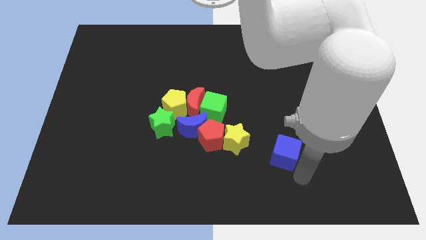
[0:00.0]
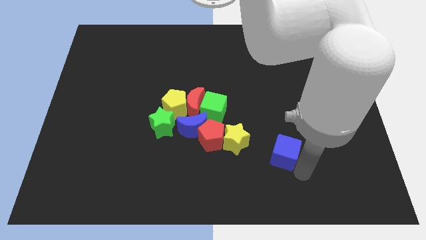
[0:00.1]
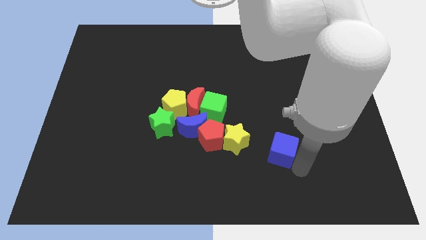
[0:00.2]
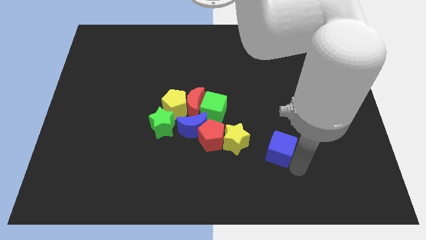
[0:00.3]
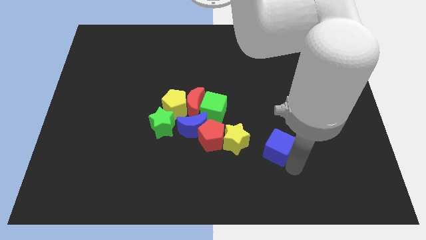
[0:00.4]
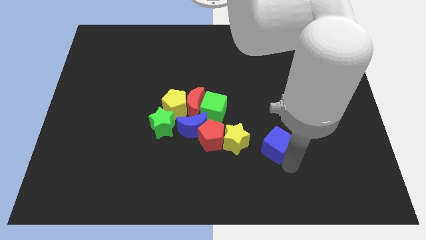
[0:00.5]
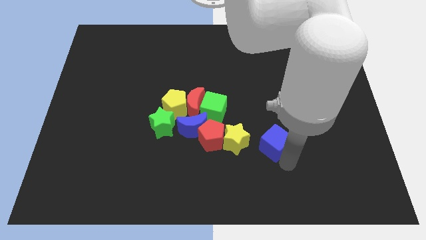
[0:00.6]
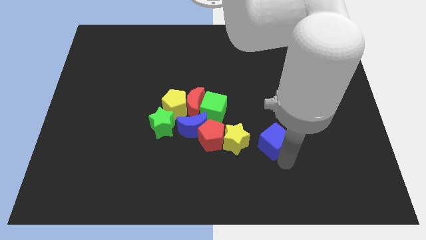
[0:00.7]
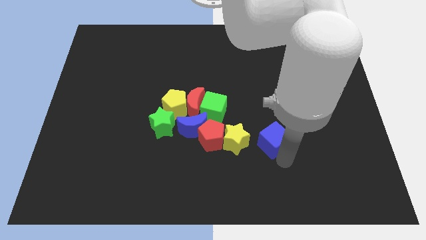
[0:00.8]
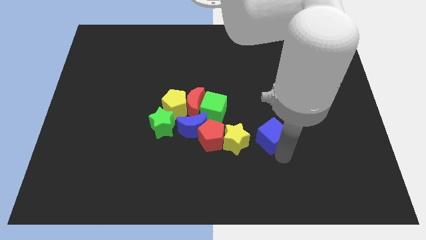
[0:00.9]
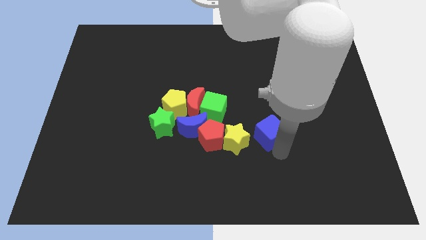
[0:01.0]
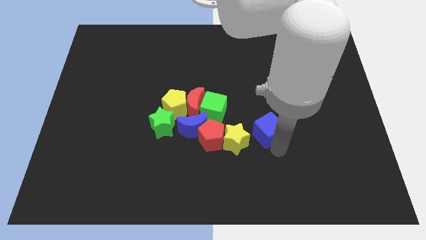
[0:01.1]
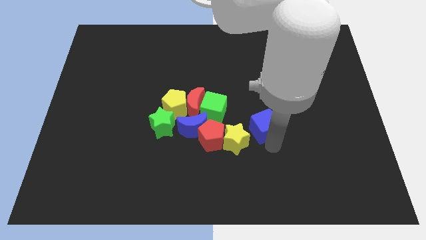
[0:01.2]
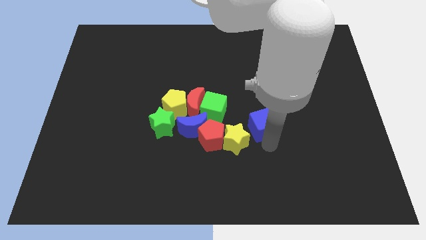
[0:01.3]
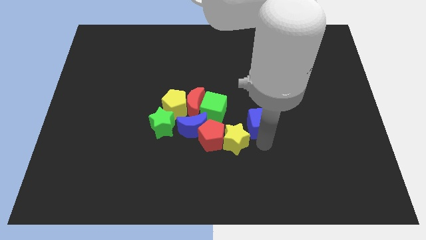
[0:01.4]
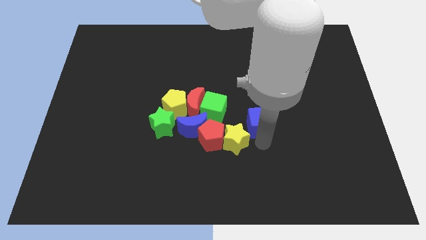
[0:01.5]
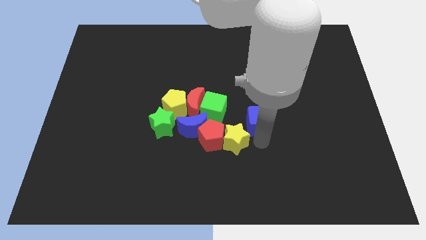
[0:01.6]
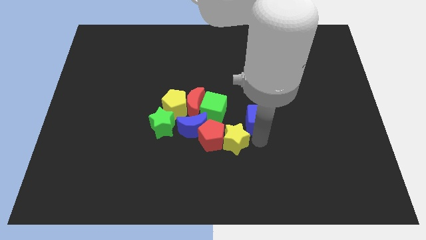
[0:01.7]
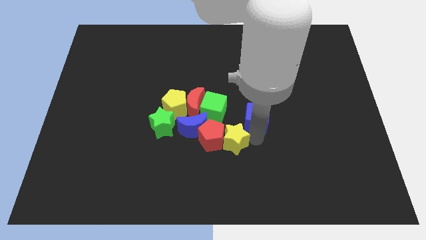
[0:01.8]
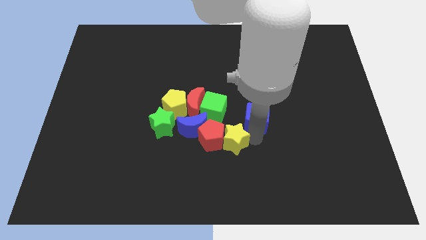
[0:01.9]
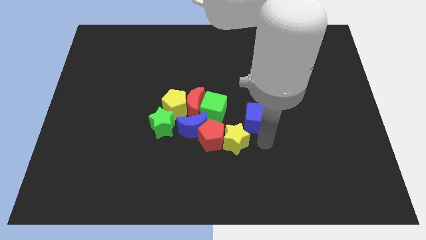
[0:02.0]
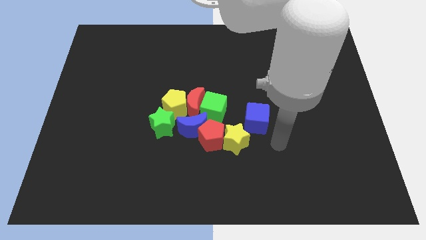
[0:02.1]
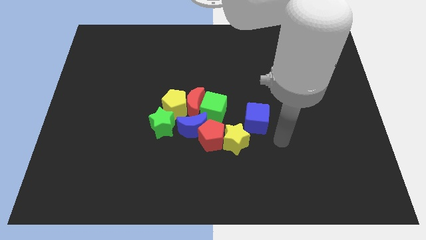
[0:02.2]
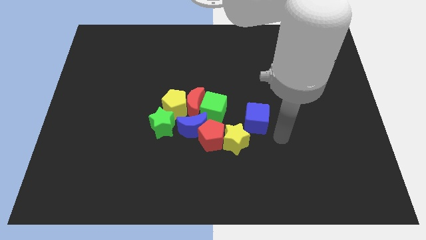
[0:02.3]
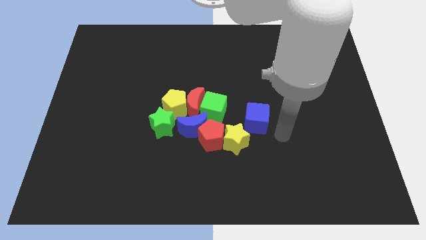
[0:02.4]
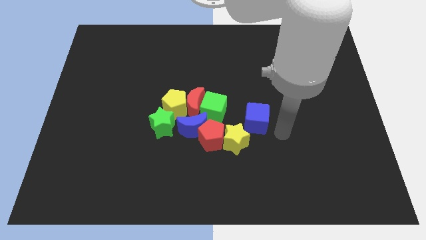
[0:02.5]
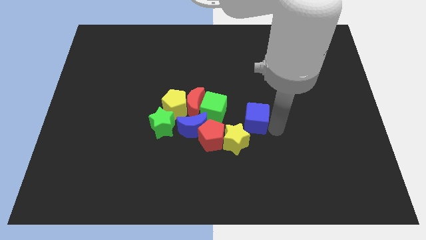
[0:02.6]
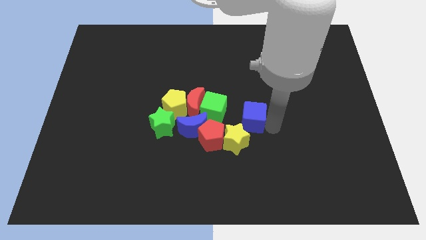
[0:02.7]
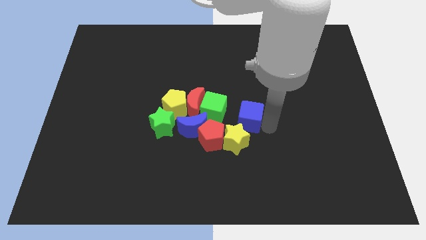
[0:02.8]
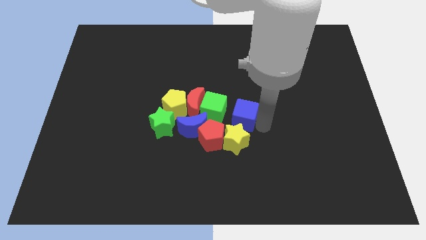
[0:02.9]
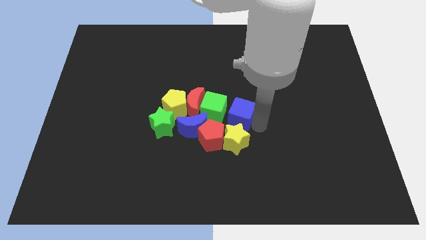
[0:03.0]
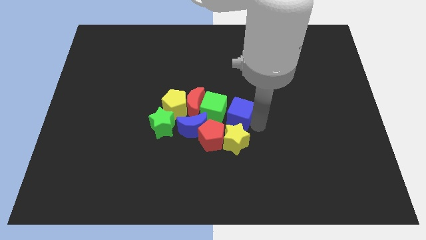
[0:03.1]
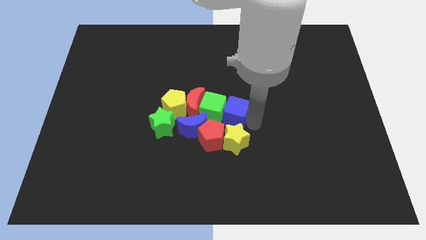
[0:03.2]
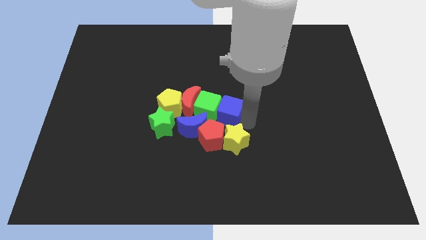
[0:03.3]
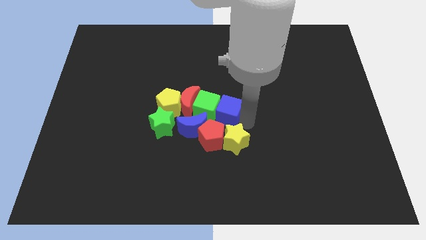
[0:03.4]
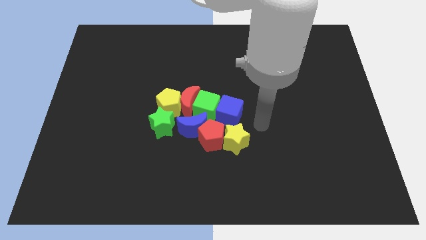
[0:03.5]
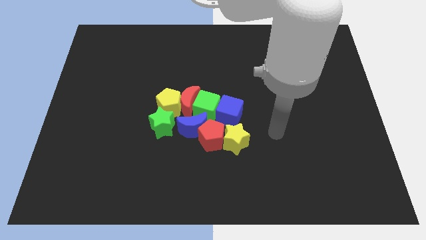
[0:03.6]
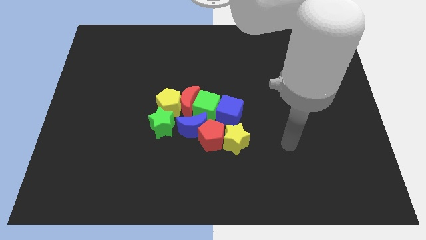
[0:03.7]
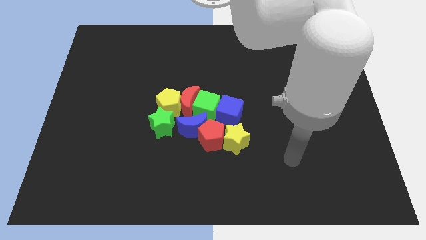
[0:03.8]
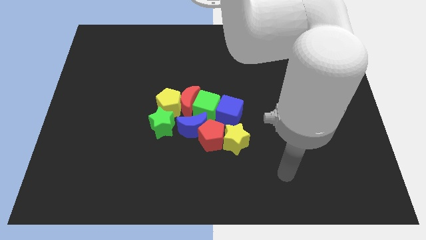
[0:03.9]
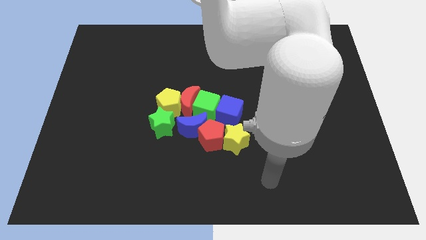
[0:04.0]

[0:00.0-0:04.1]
push blue cube into green cube

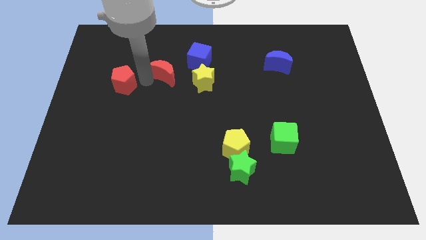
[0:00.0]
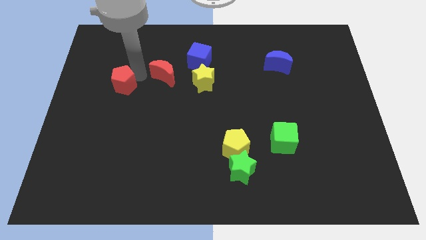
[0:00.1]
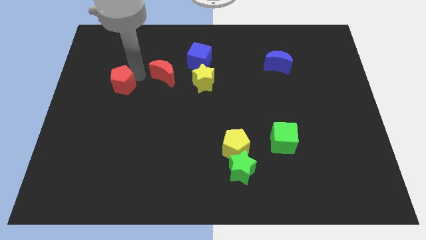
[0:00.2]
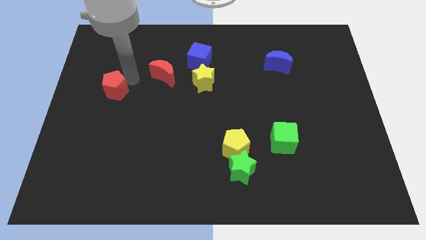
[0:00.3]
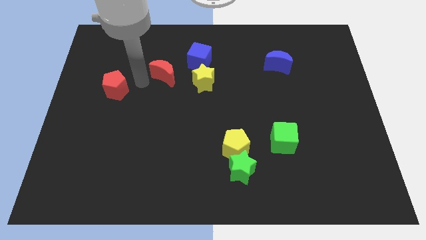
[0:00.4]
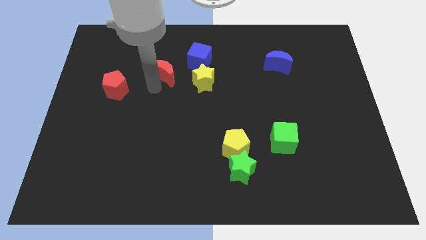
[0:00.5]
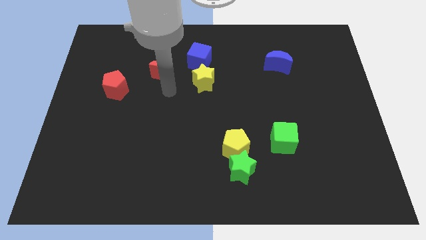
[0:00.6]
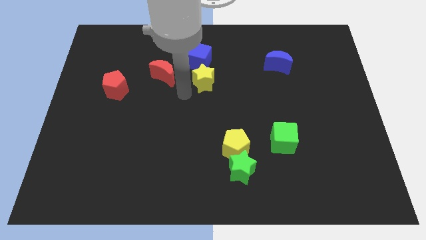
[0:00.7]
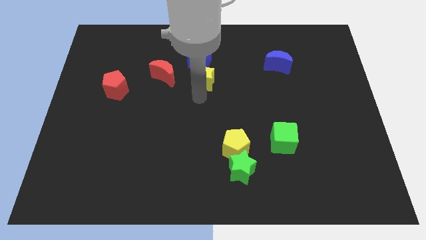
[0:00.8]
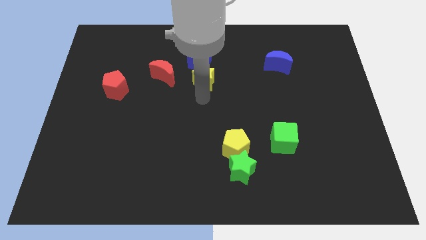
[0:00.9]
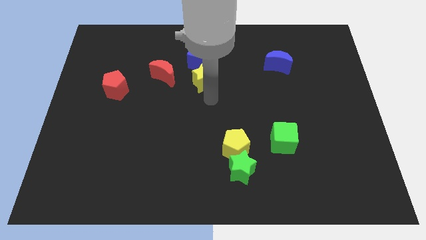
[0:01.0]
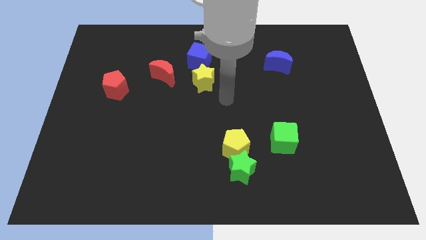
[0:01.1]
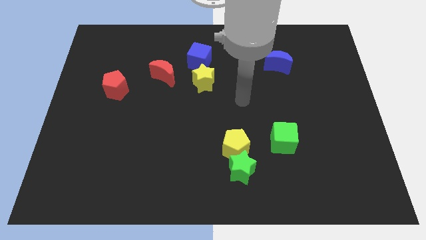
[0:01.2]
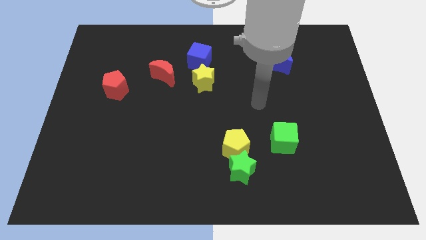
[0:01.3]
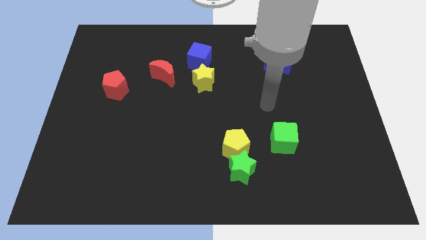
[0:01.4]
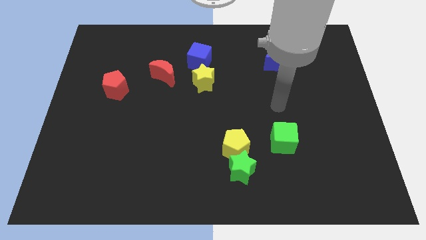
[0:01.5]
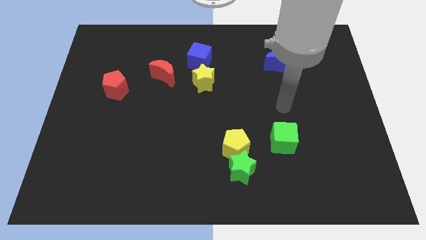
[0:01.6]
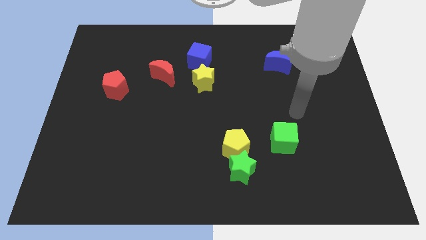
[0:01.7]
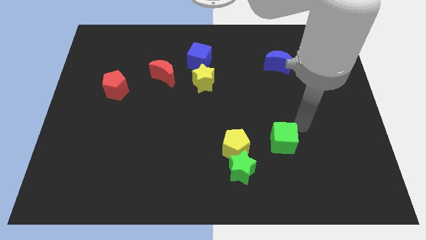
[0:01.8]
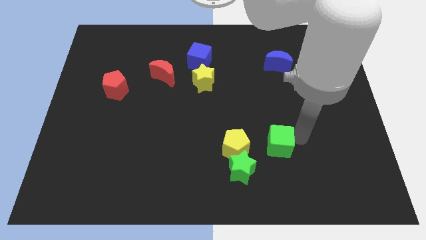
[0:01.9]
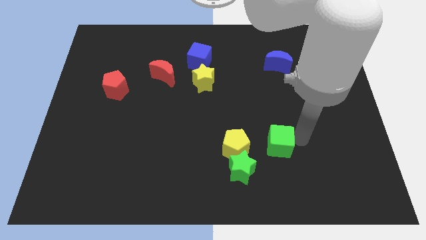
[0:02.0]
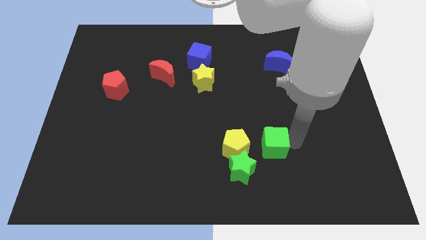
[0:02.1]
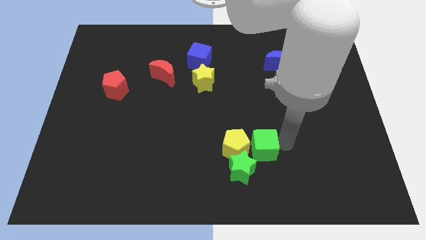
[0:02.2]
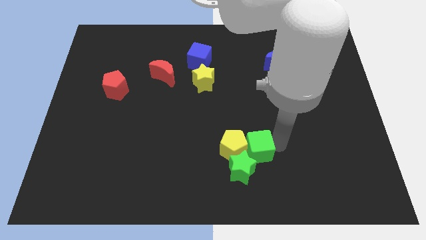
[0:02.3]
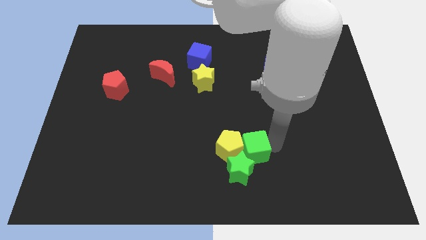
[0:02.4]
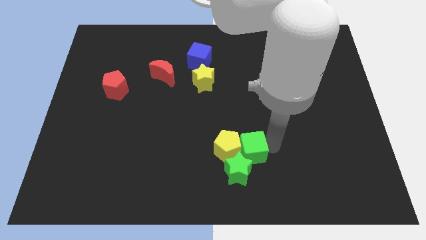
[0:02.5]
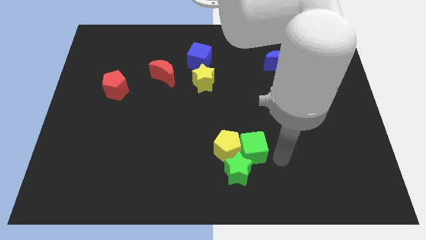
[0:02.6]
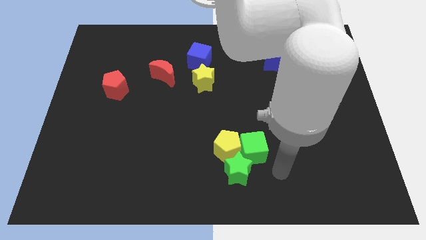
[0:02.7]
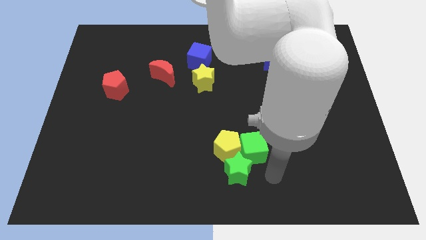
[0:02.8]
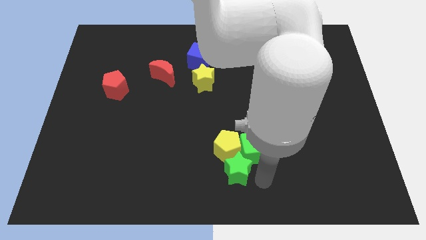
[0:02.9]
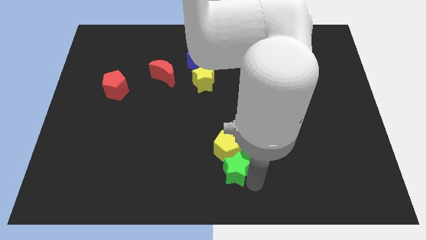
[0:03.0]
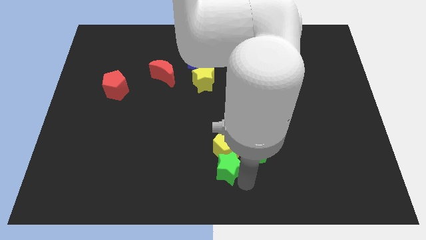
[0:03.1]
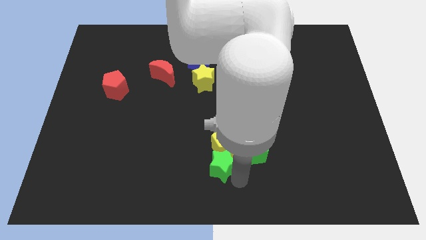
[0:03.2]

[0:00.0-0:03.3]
push the green cube to the right of the yellow pentagon

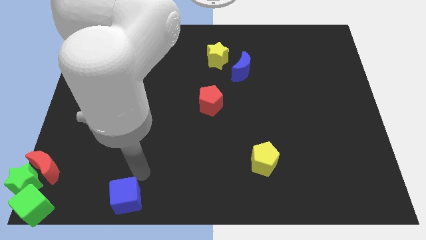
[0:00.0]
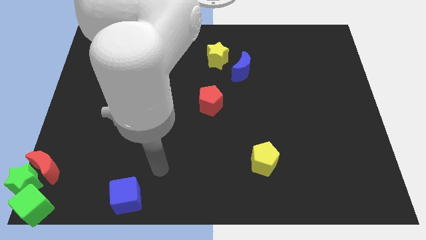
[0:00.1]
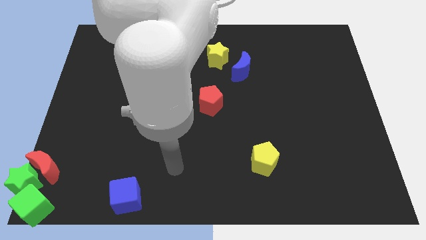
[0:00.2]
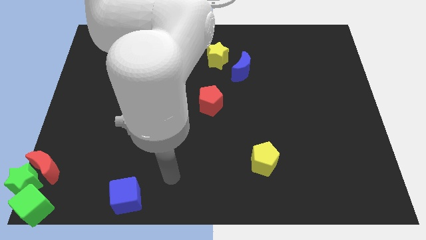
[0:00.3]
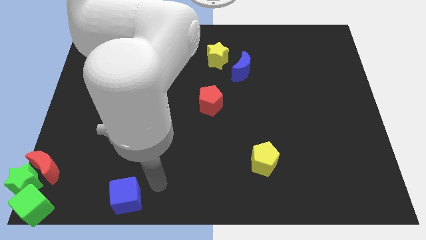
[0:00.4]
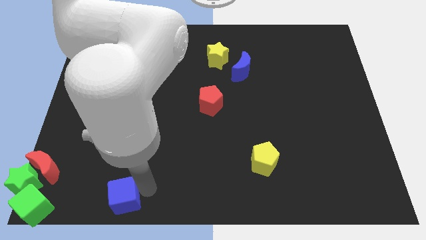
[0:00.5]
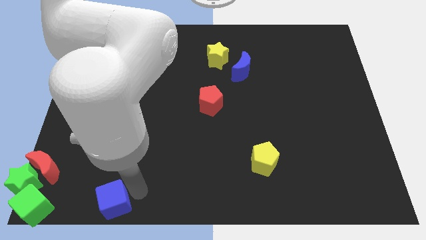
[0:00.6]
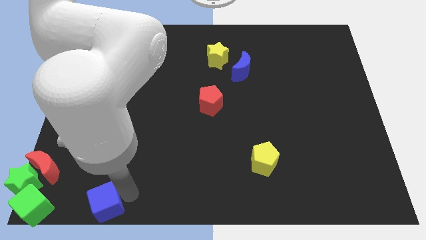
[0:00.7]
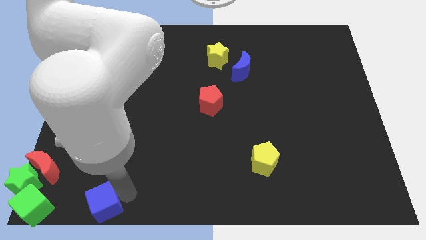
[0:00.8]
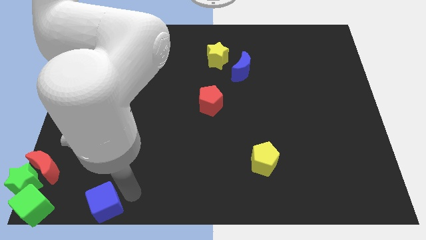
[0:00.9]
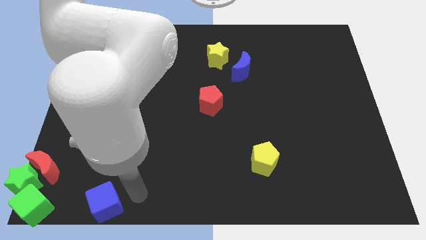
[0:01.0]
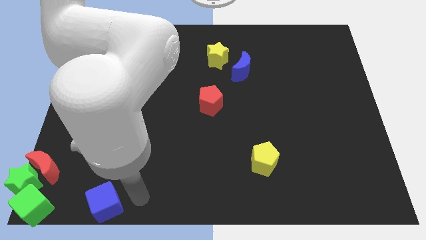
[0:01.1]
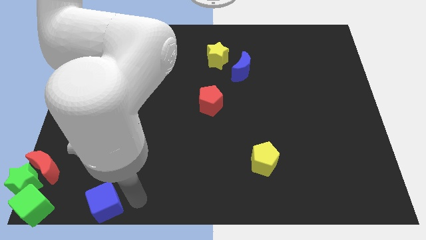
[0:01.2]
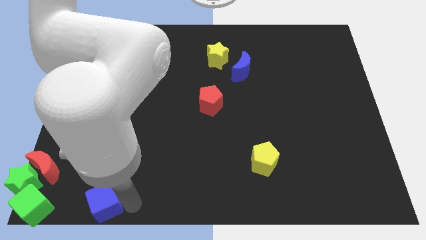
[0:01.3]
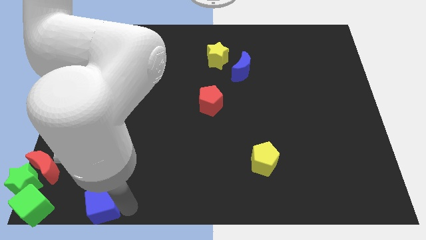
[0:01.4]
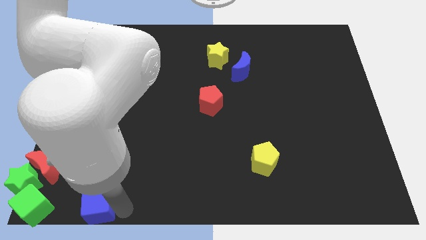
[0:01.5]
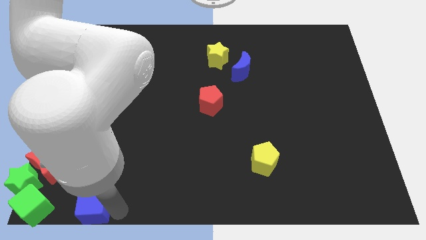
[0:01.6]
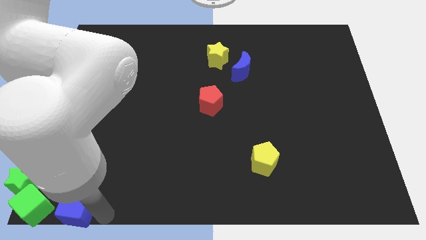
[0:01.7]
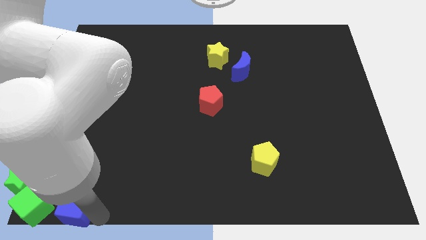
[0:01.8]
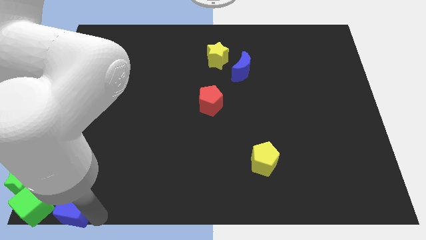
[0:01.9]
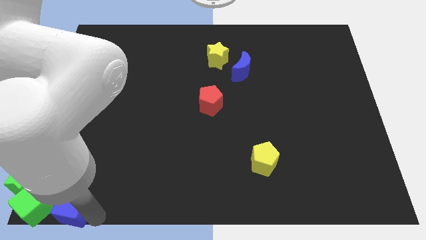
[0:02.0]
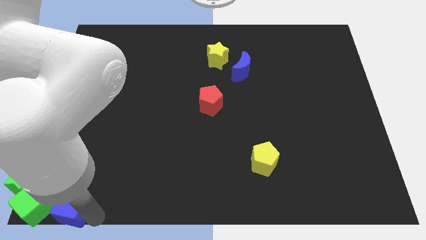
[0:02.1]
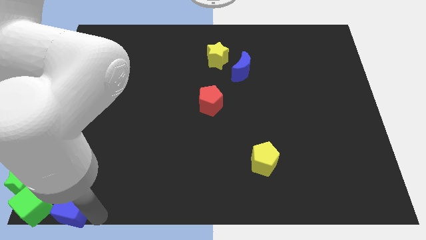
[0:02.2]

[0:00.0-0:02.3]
move blue cube towards green cube
